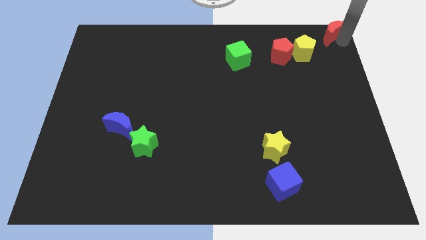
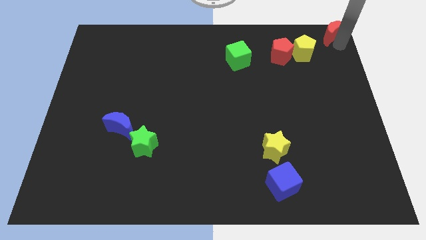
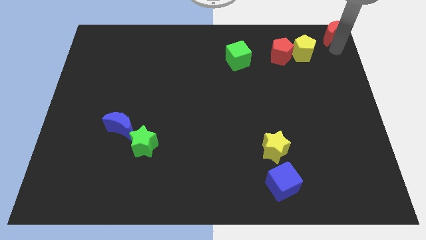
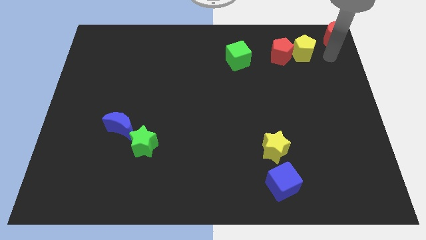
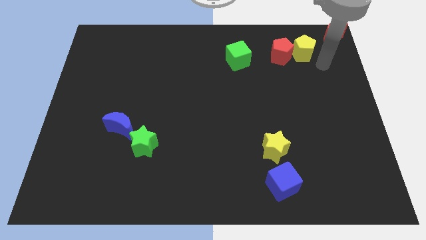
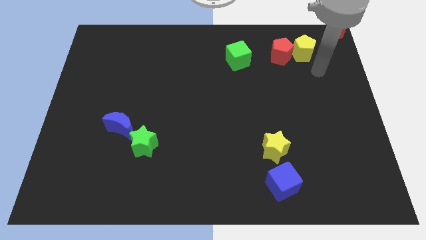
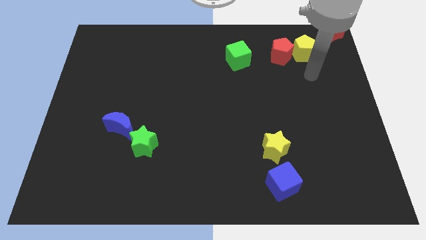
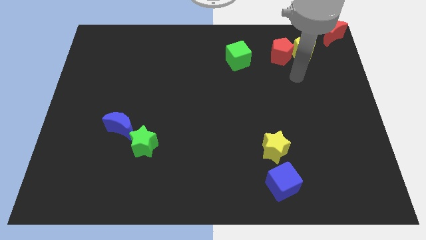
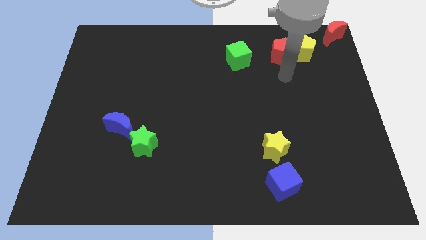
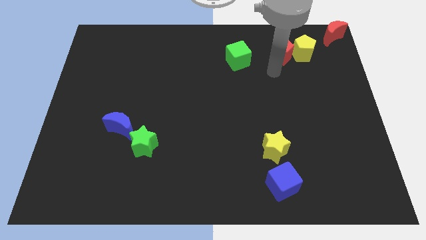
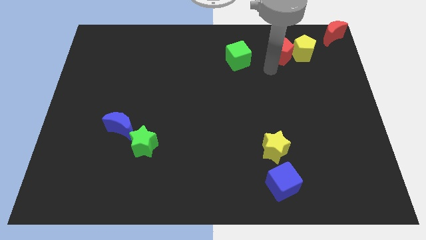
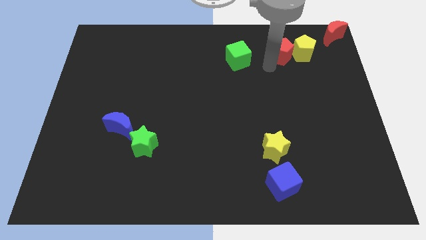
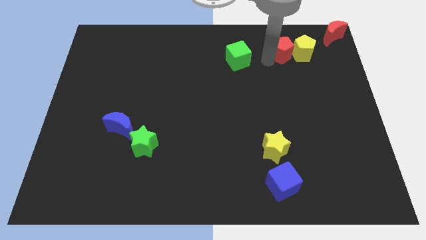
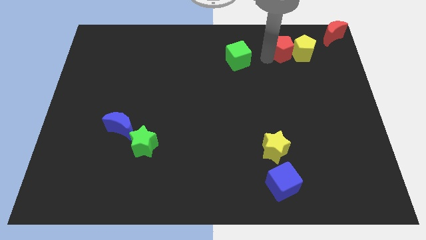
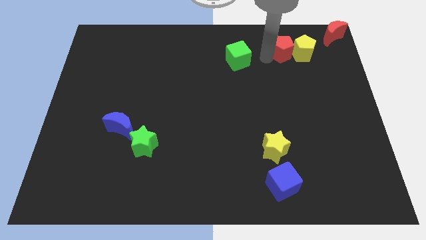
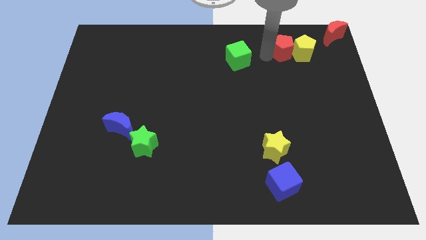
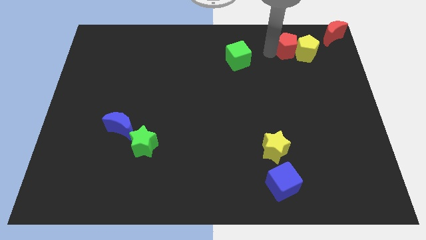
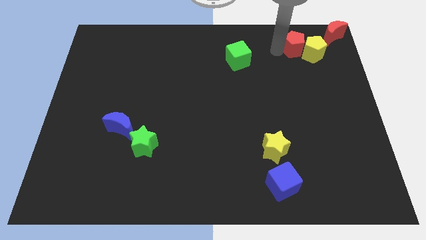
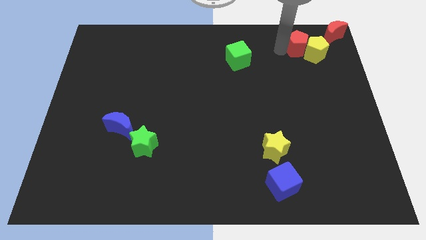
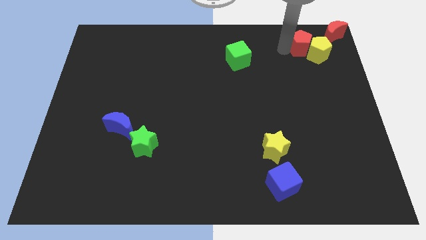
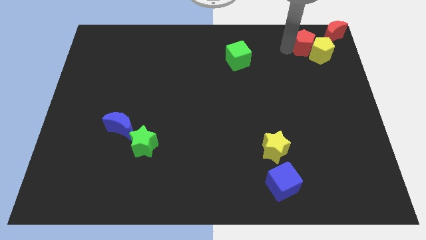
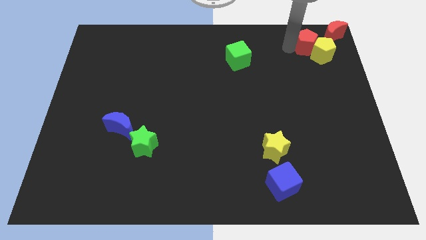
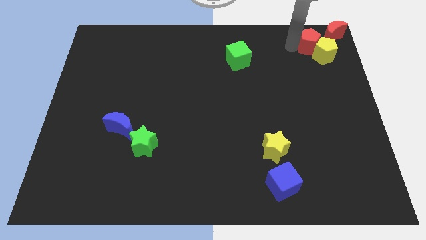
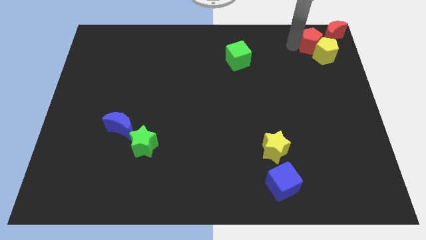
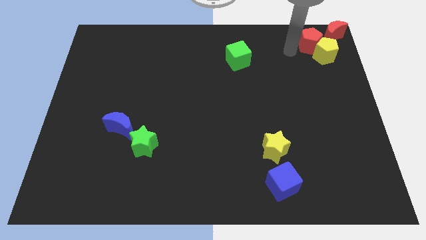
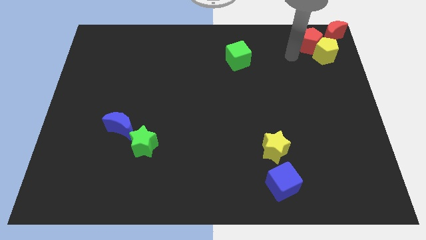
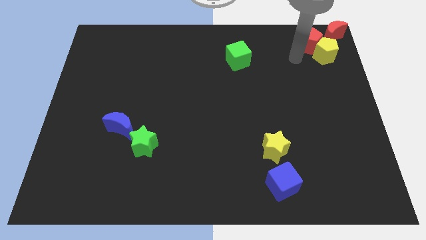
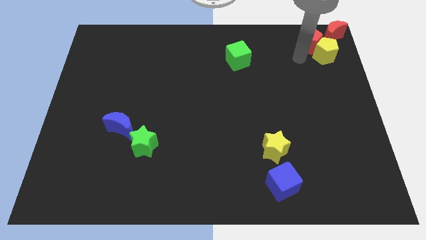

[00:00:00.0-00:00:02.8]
place the red pentagon to the left of the red moon

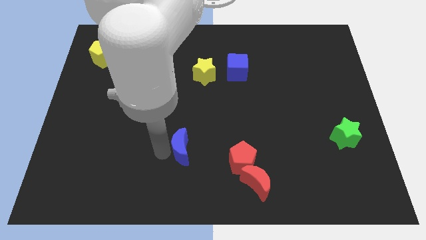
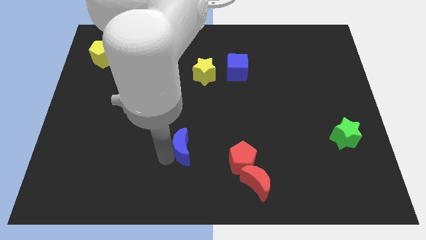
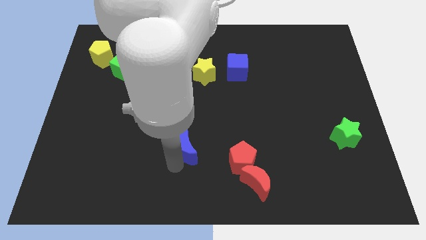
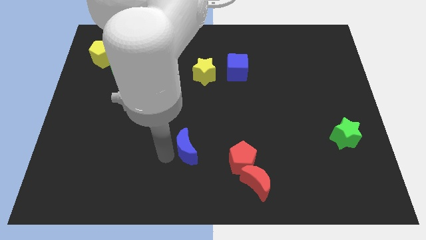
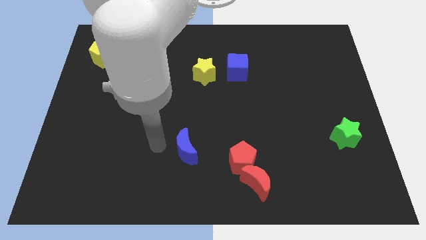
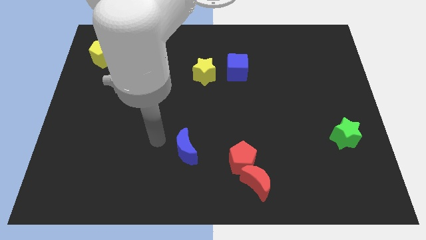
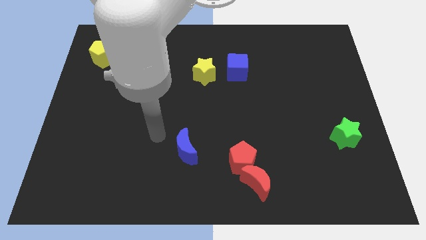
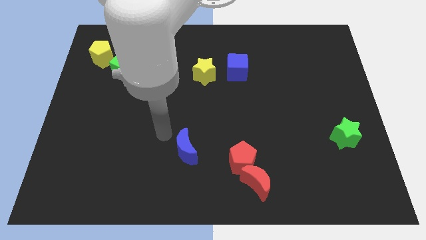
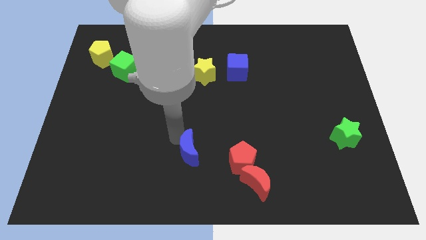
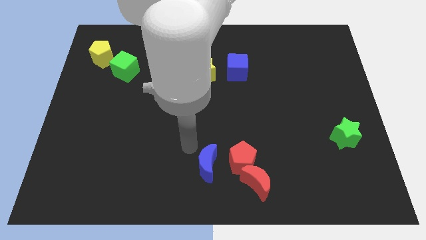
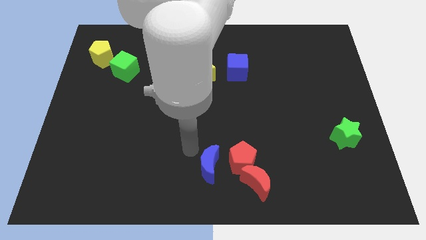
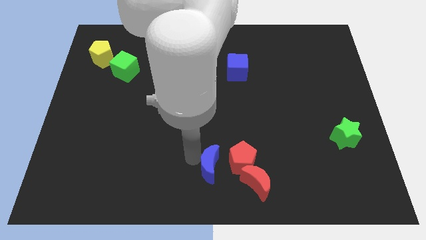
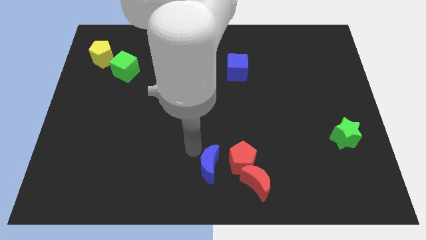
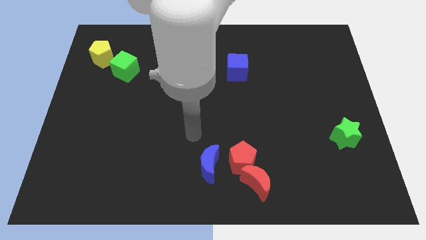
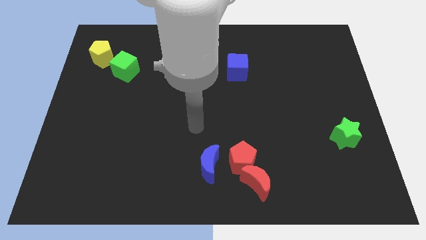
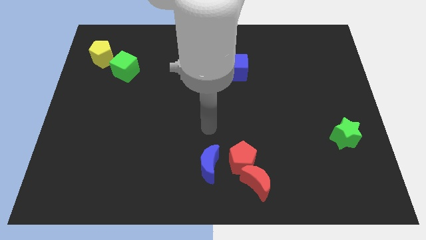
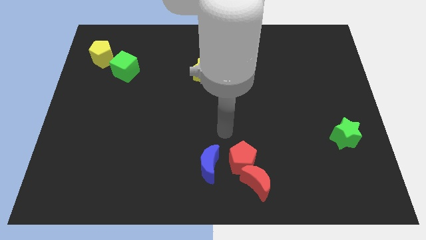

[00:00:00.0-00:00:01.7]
move blue moon close to the red pentagon

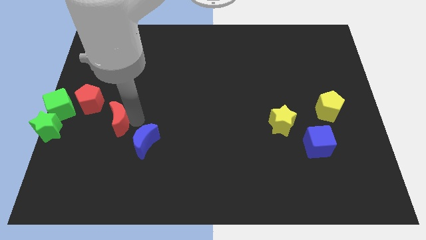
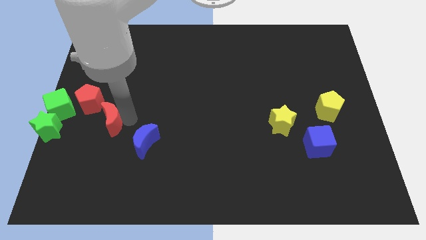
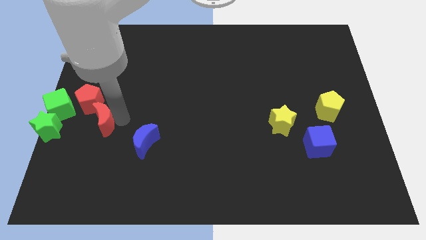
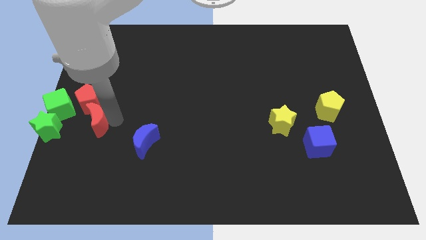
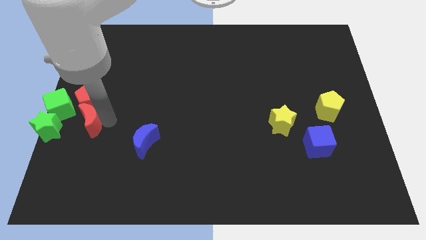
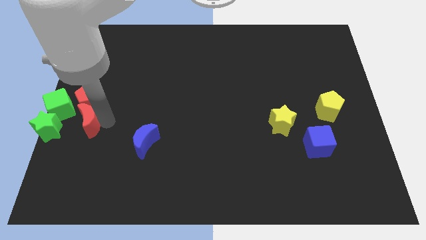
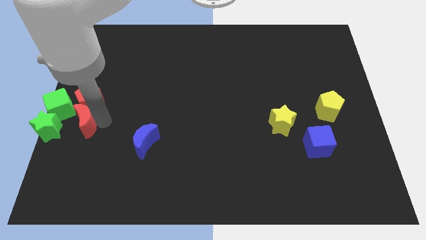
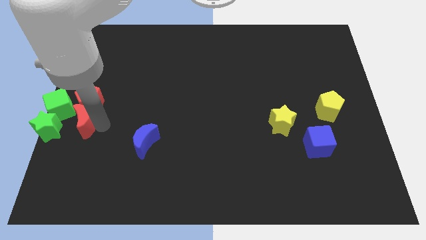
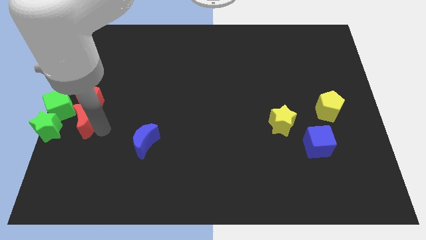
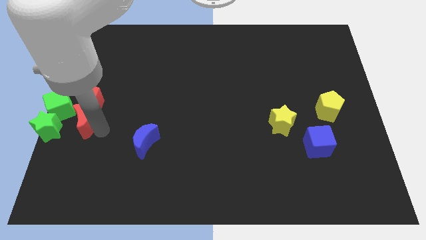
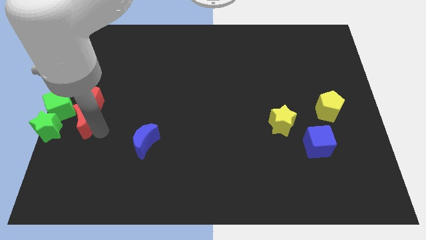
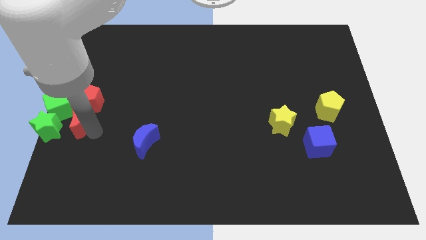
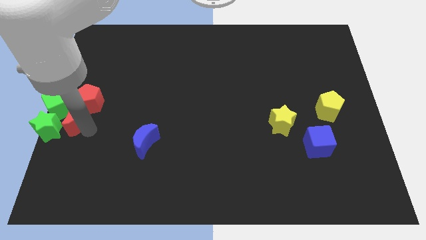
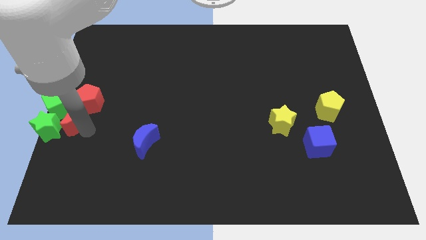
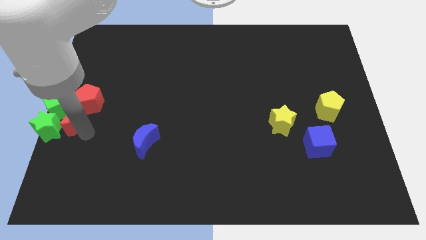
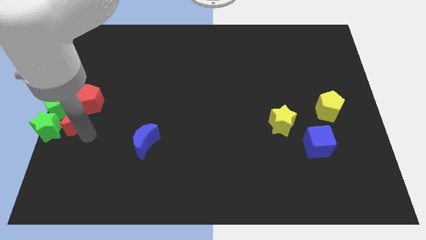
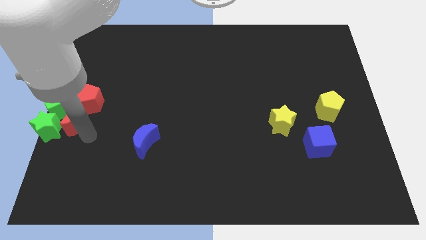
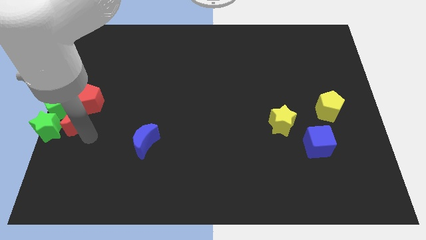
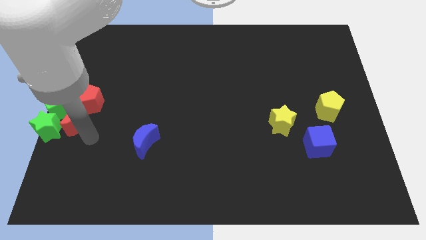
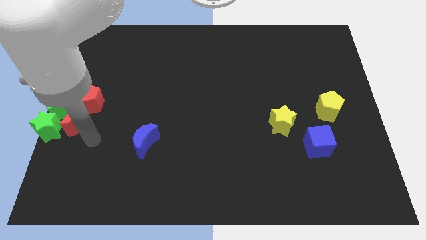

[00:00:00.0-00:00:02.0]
push the red crescent to the right side of the green star

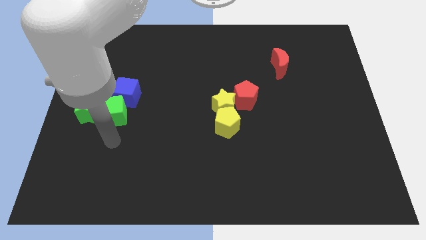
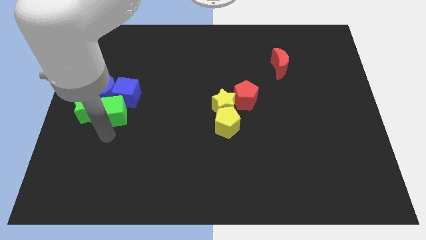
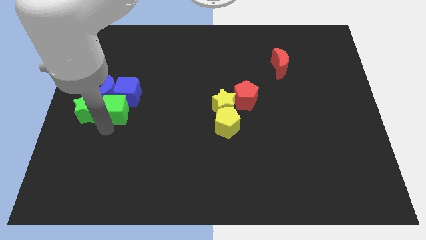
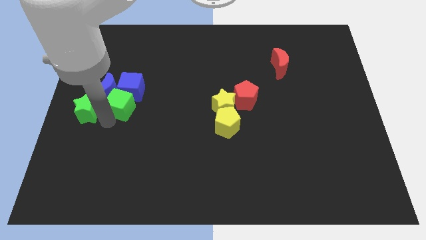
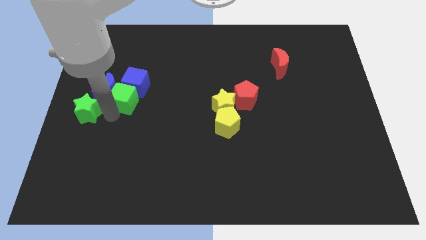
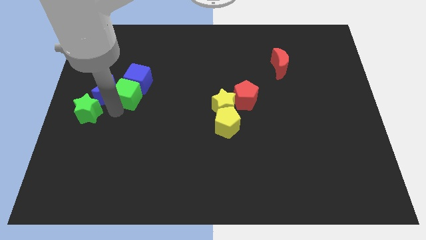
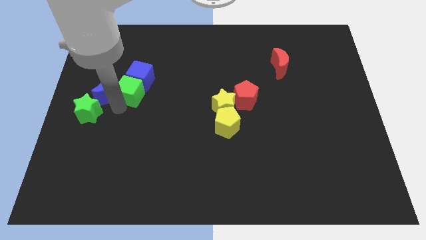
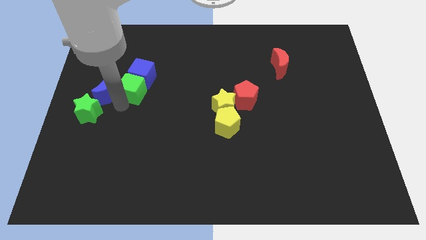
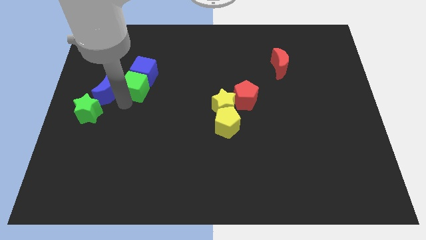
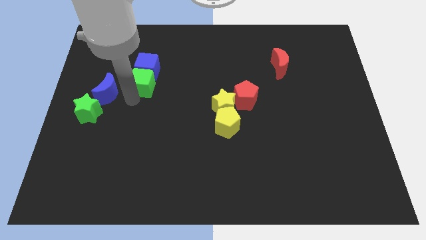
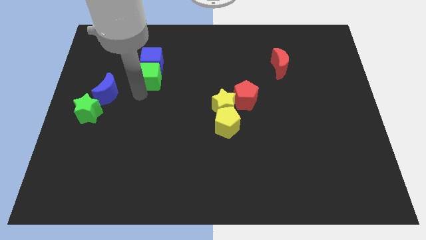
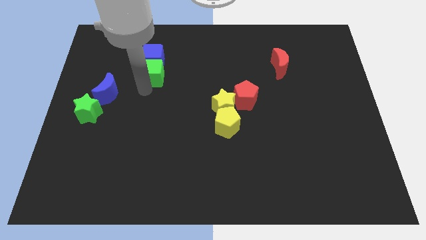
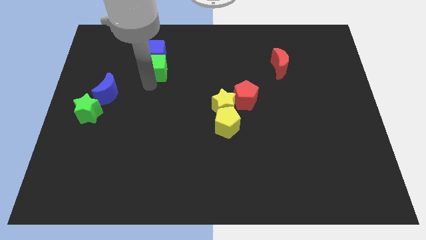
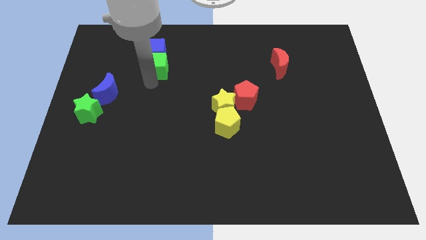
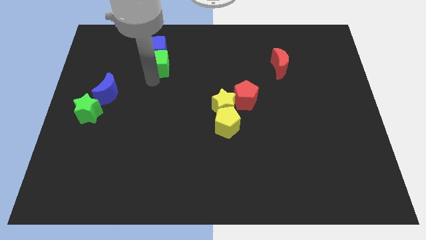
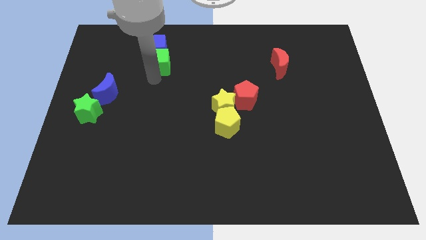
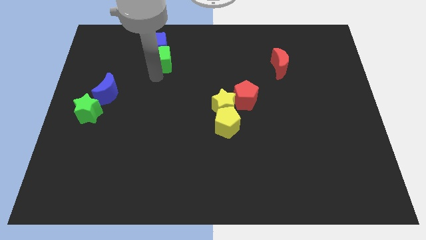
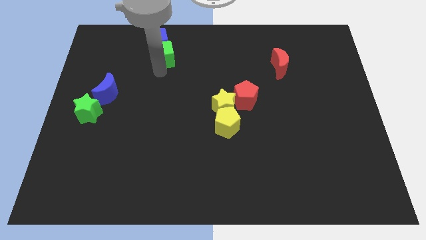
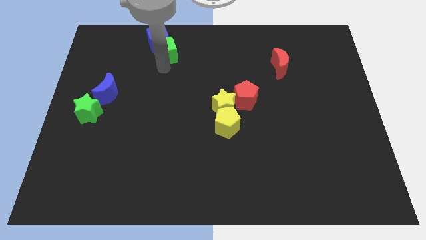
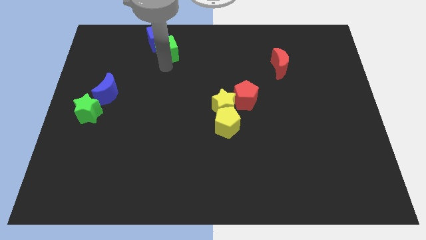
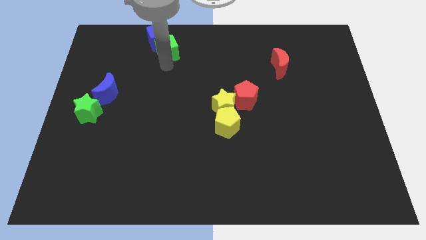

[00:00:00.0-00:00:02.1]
push green cube along with blue cube towards top of the board

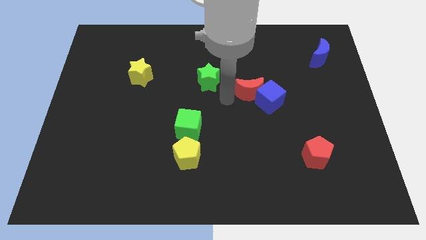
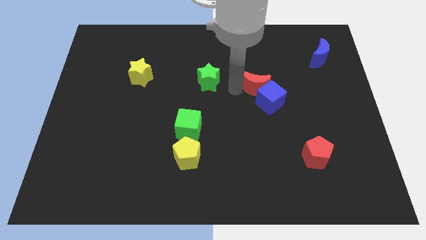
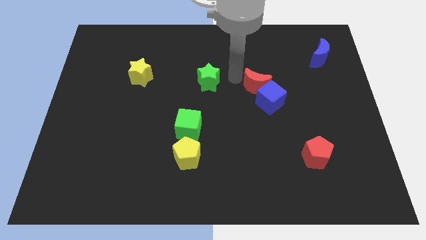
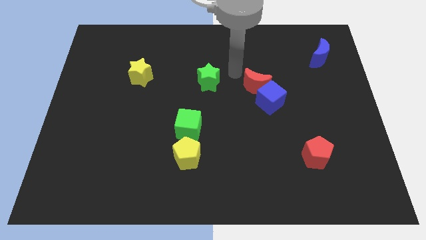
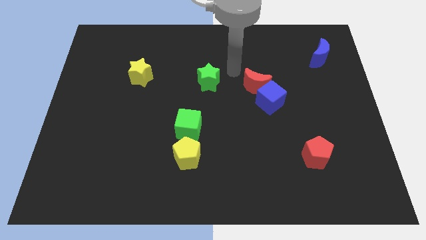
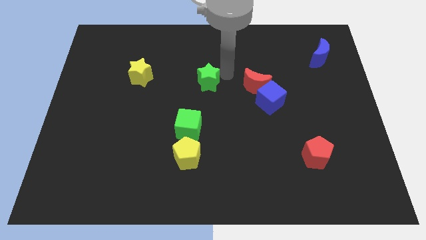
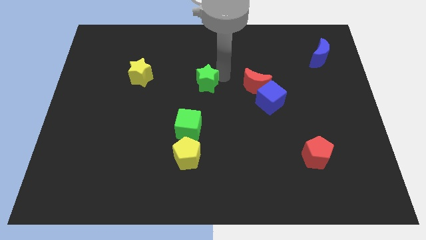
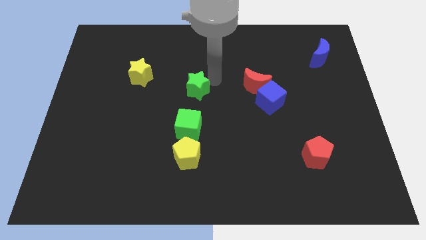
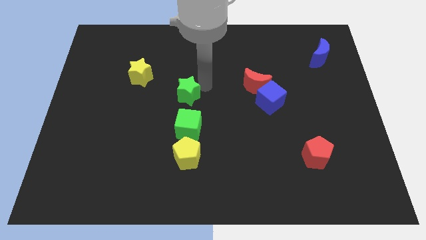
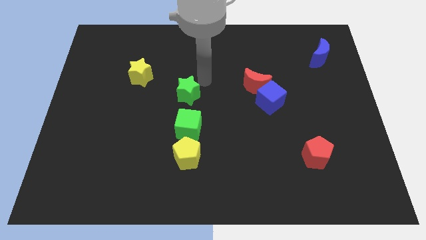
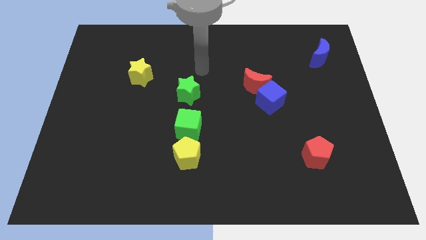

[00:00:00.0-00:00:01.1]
move green star above green cube
